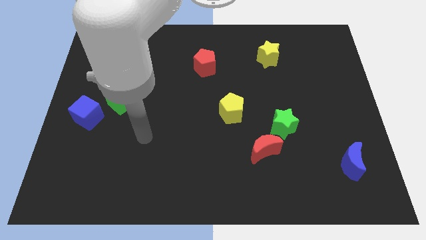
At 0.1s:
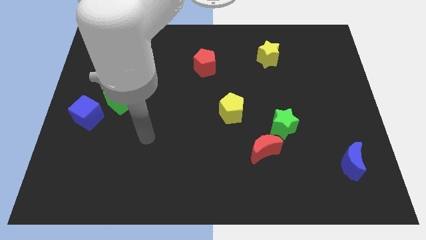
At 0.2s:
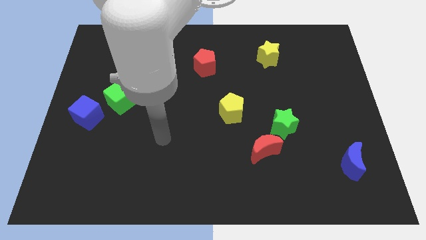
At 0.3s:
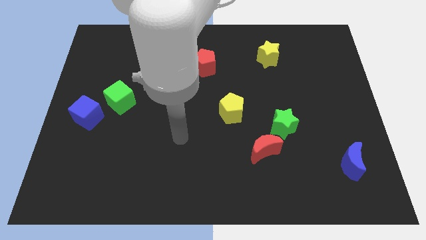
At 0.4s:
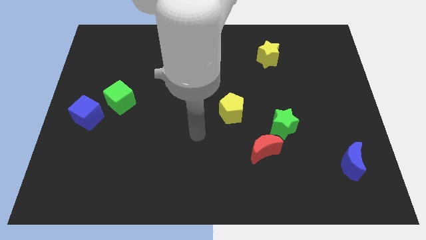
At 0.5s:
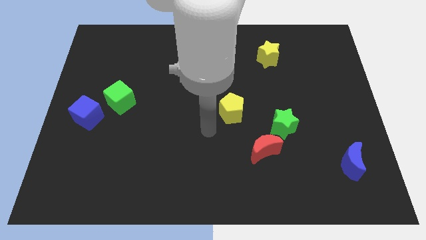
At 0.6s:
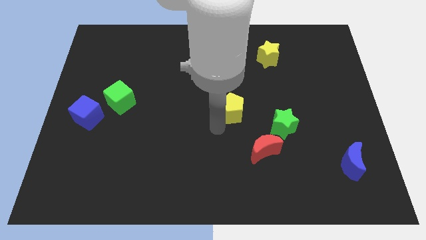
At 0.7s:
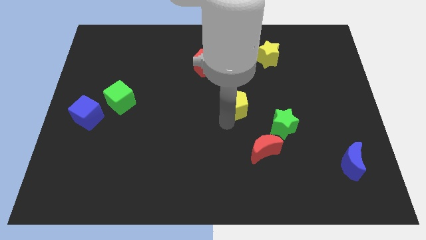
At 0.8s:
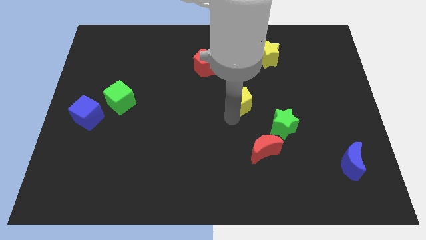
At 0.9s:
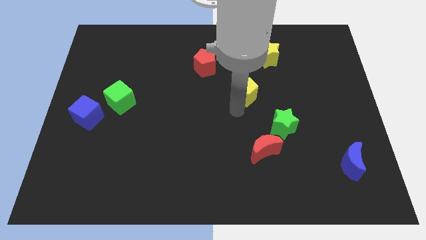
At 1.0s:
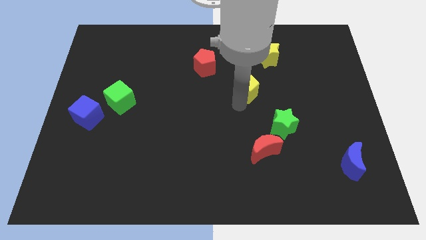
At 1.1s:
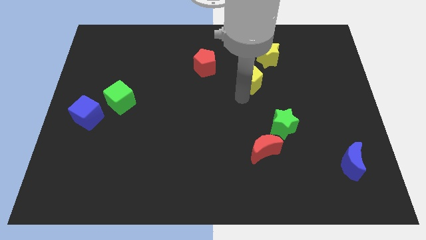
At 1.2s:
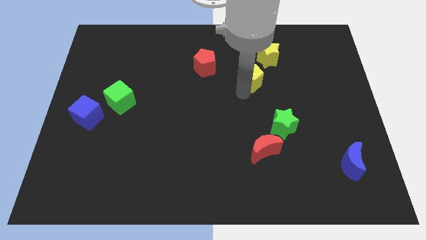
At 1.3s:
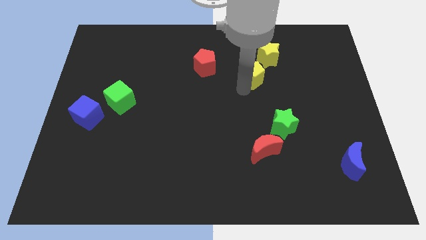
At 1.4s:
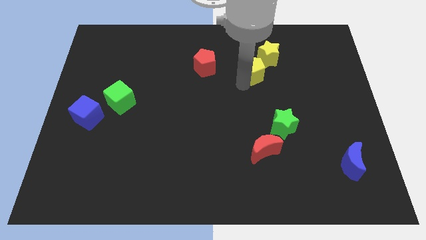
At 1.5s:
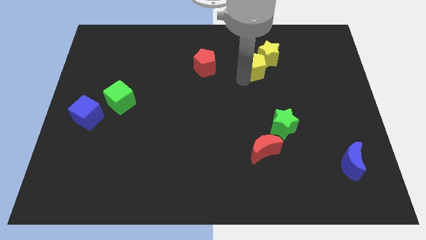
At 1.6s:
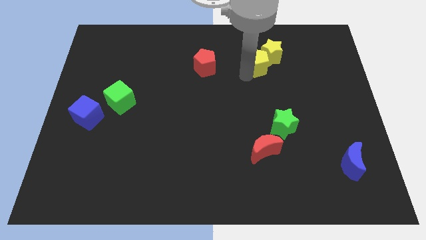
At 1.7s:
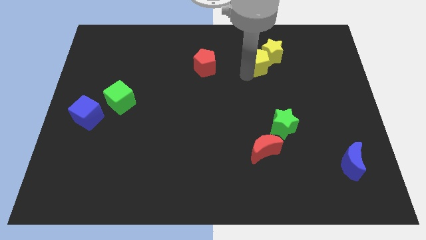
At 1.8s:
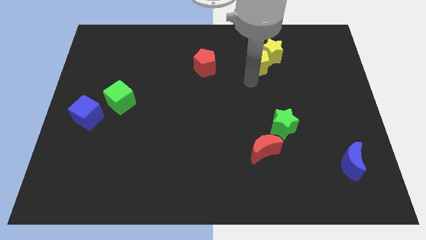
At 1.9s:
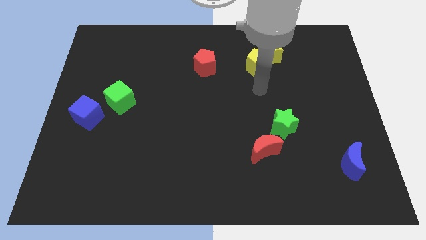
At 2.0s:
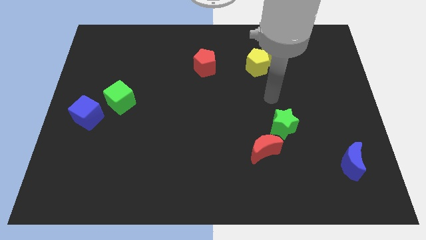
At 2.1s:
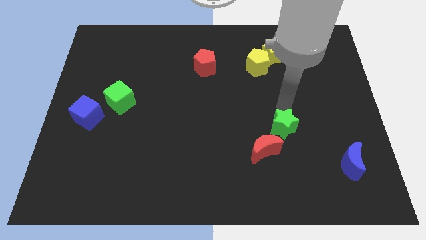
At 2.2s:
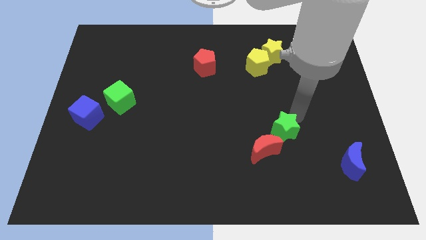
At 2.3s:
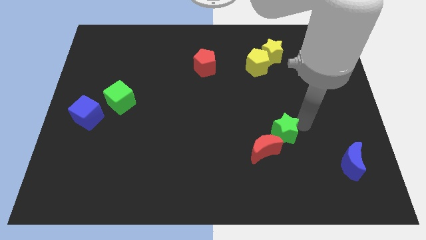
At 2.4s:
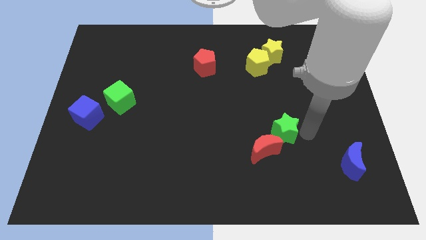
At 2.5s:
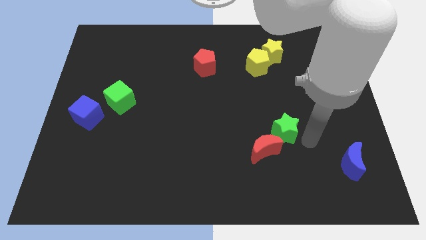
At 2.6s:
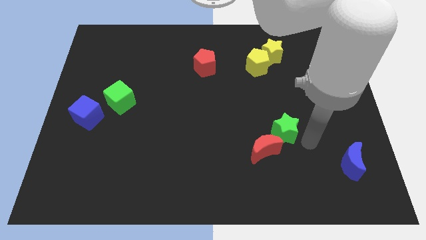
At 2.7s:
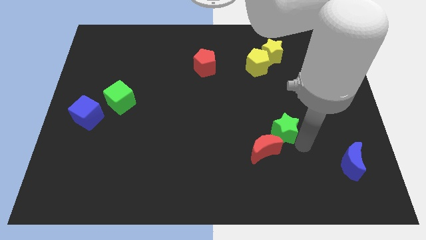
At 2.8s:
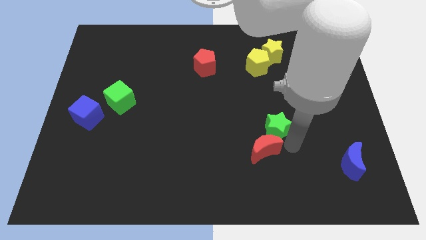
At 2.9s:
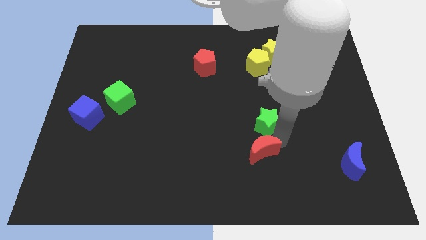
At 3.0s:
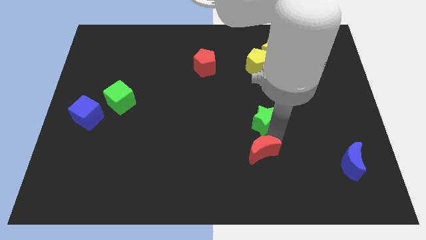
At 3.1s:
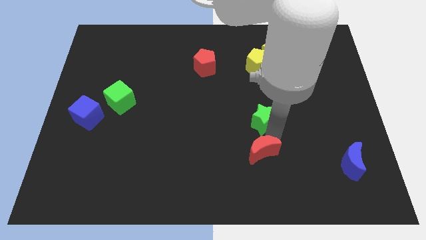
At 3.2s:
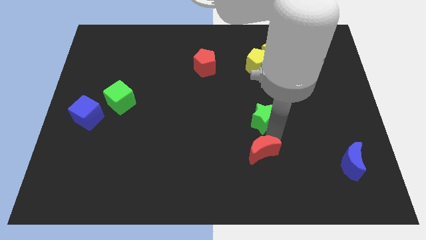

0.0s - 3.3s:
push the yellow pentagon close to the yellow star

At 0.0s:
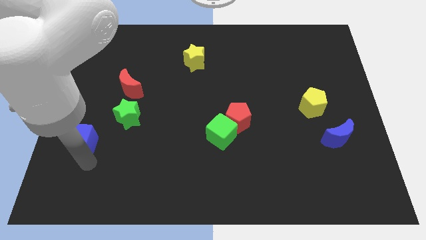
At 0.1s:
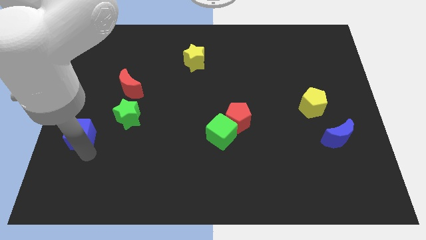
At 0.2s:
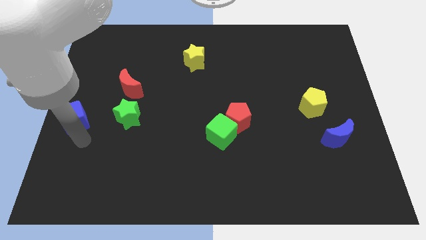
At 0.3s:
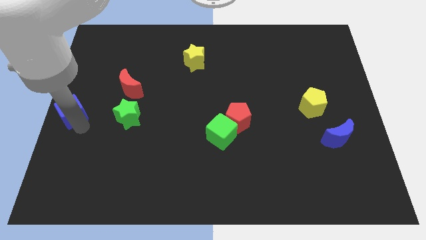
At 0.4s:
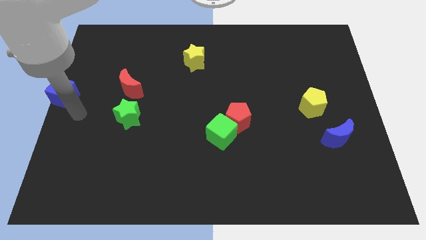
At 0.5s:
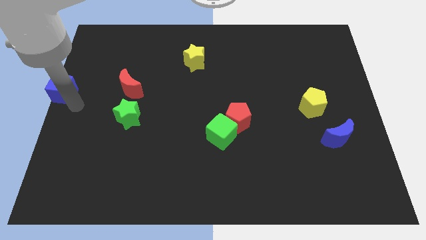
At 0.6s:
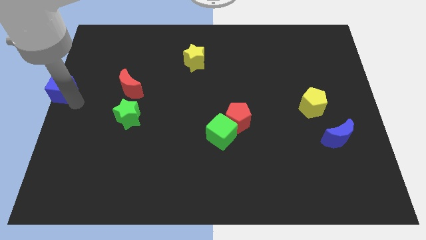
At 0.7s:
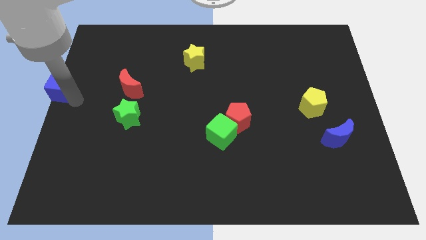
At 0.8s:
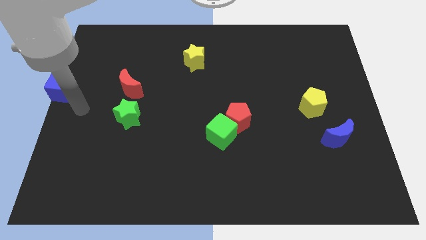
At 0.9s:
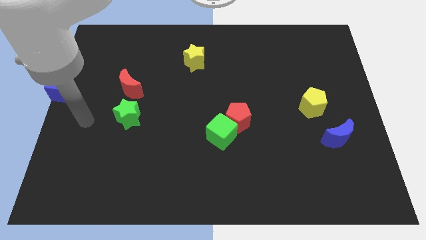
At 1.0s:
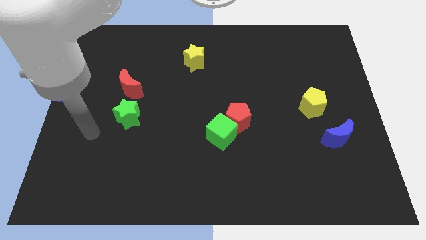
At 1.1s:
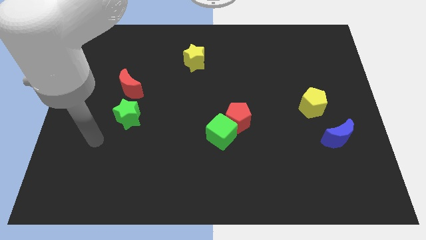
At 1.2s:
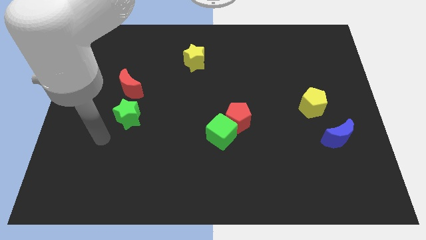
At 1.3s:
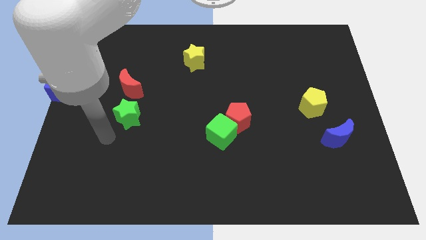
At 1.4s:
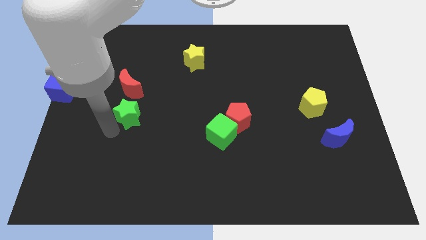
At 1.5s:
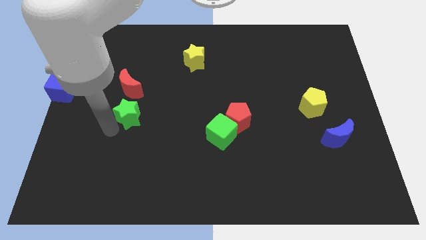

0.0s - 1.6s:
slide the blue cube diagonally top left to the green star

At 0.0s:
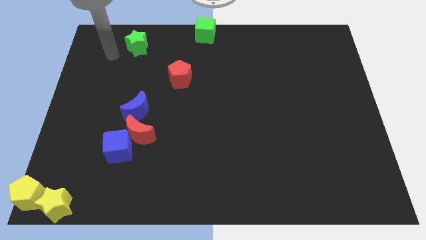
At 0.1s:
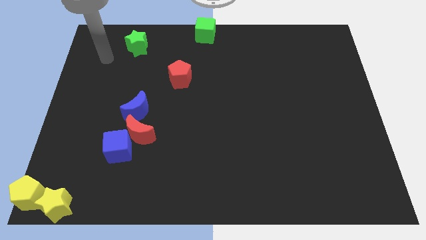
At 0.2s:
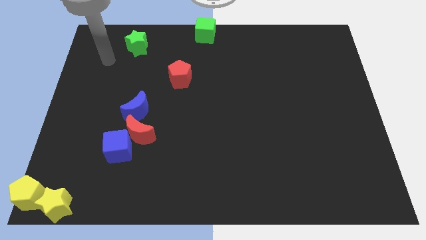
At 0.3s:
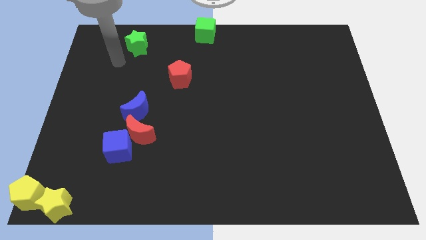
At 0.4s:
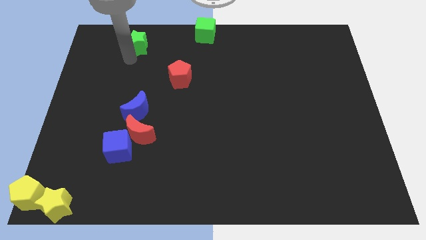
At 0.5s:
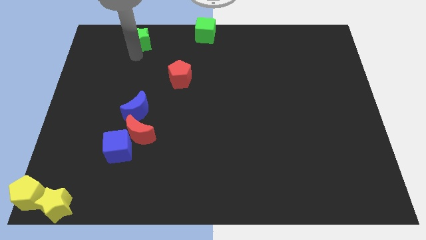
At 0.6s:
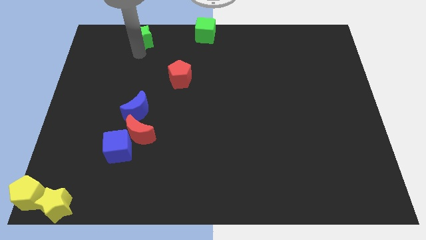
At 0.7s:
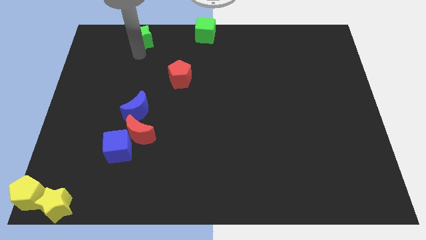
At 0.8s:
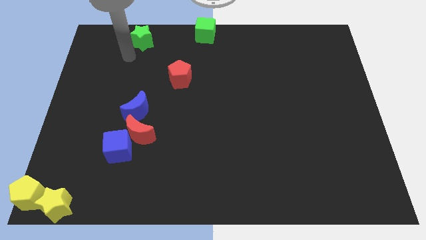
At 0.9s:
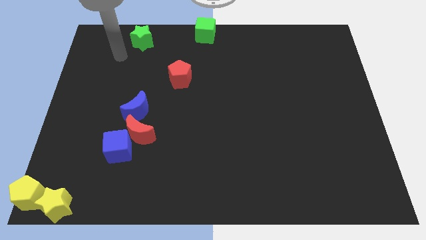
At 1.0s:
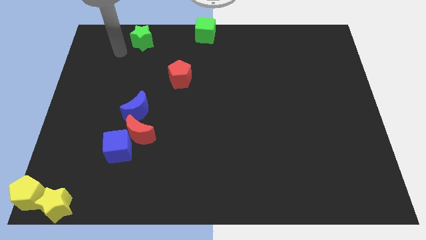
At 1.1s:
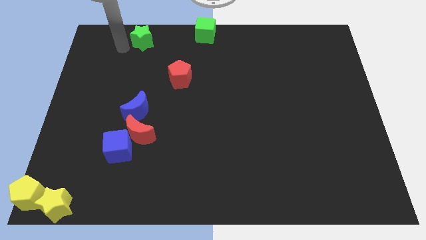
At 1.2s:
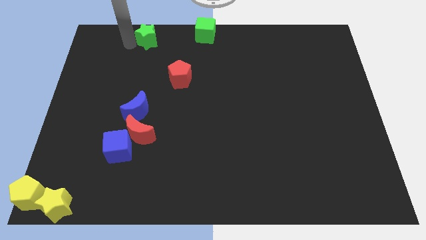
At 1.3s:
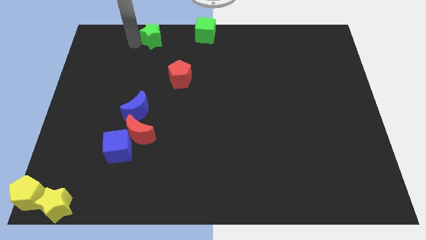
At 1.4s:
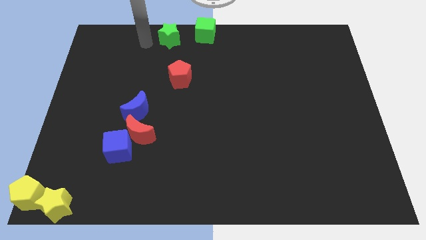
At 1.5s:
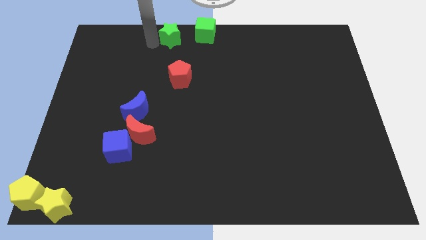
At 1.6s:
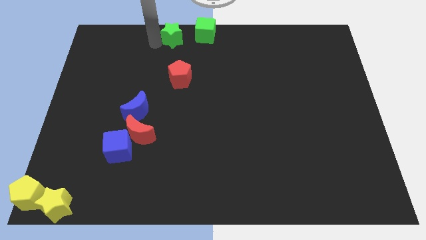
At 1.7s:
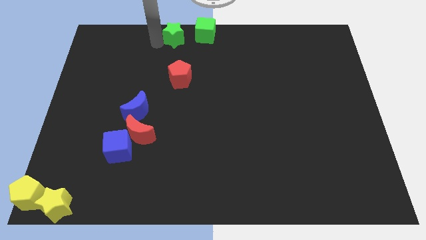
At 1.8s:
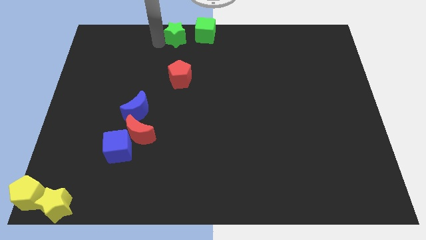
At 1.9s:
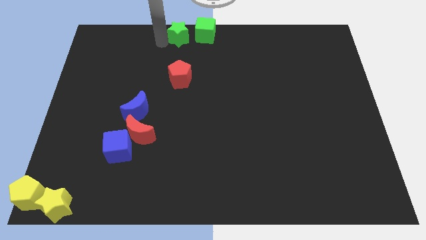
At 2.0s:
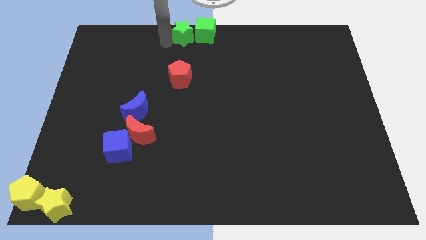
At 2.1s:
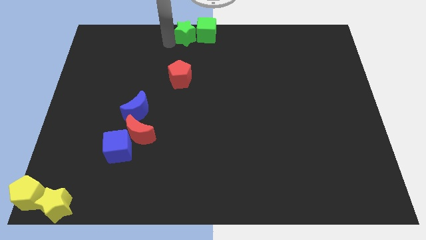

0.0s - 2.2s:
move the green star towards left side of the green cube

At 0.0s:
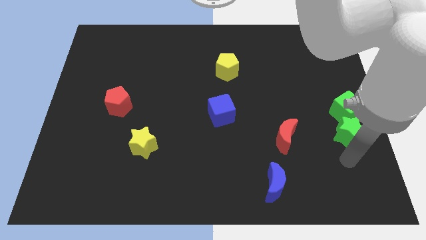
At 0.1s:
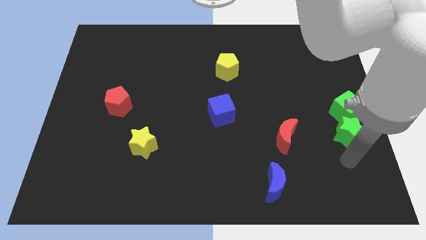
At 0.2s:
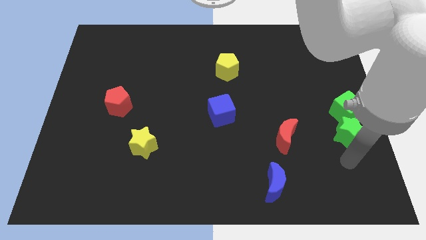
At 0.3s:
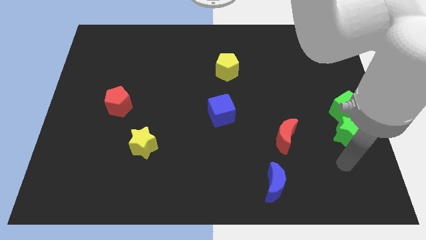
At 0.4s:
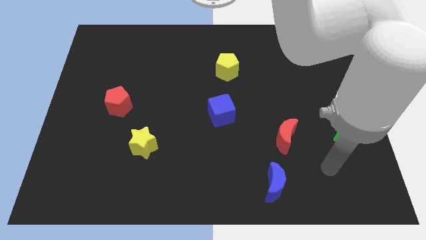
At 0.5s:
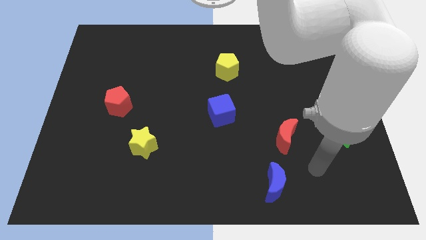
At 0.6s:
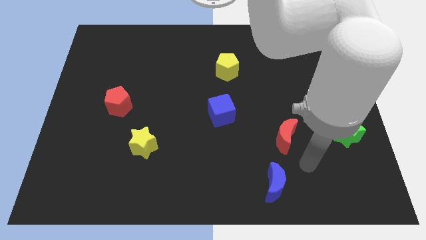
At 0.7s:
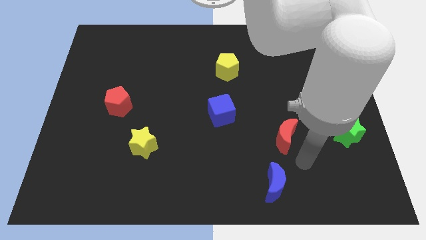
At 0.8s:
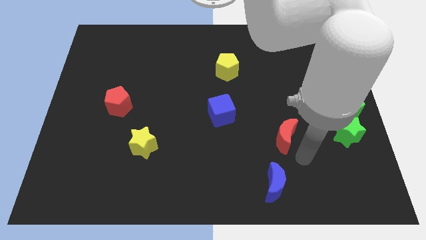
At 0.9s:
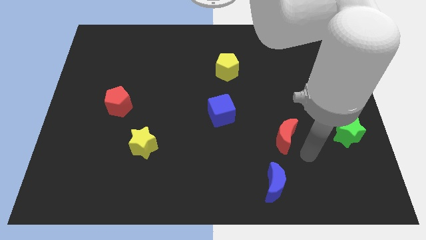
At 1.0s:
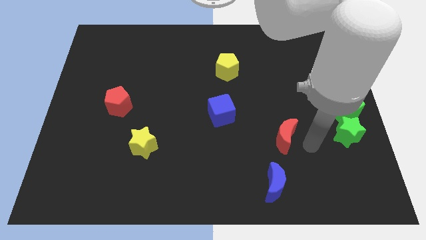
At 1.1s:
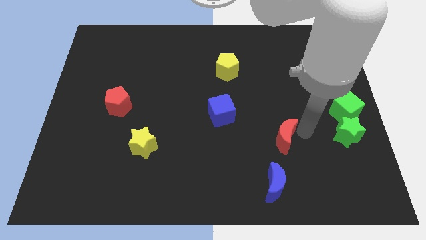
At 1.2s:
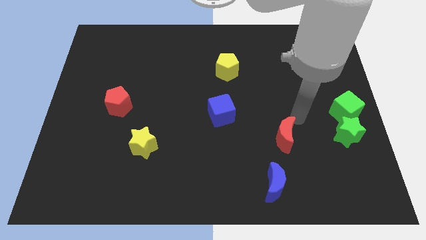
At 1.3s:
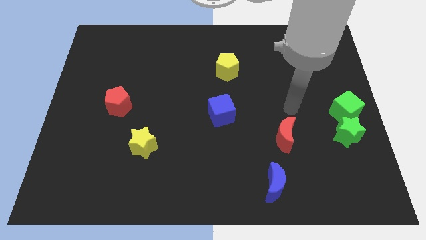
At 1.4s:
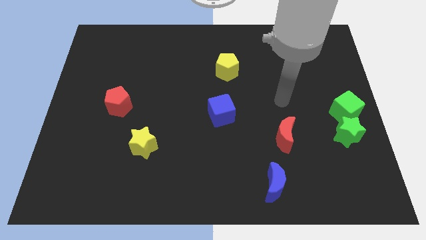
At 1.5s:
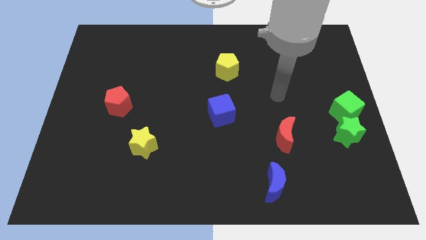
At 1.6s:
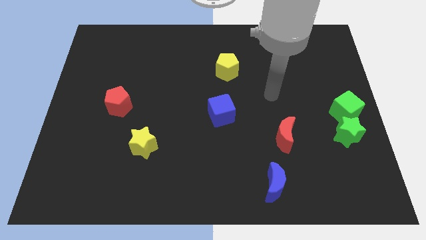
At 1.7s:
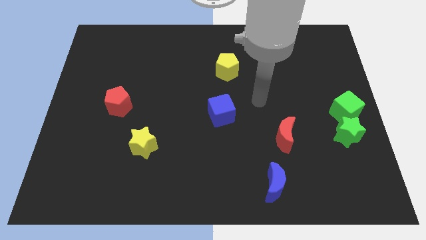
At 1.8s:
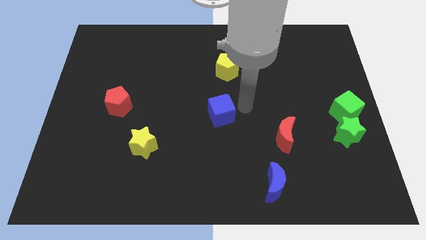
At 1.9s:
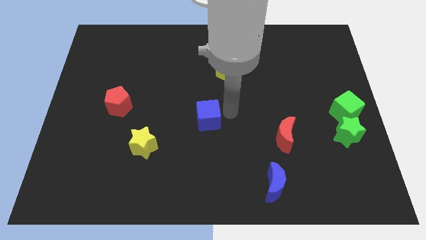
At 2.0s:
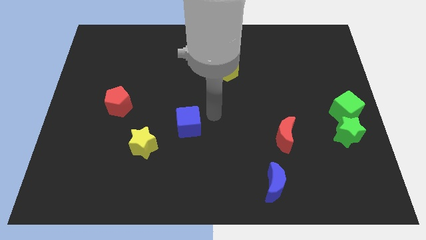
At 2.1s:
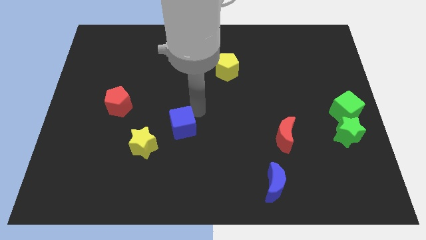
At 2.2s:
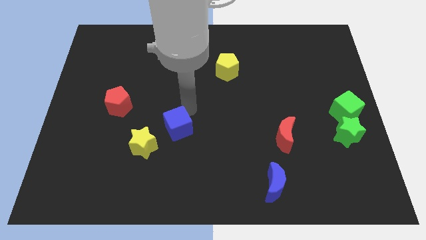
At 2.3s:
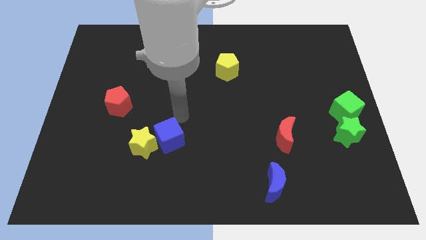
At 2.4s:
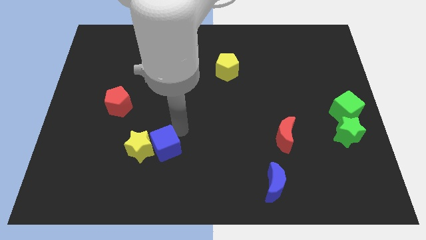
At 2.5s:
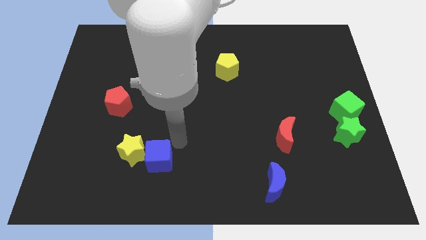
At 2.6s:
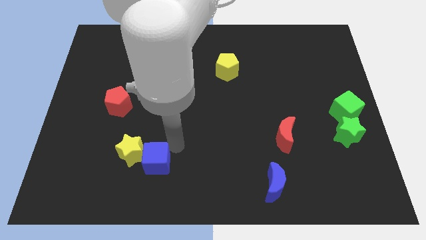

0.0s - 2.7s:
push blue cube into the yellow star
